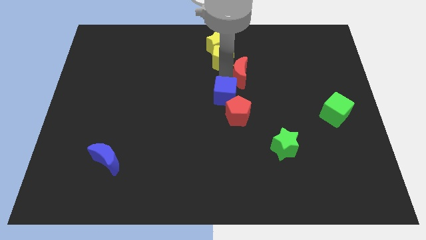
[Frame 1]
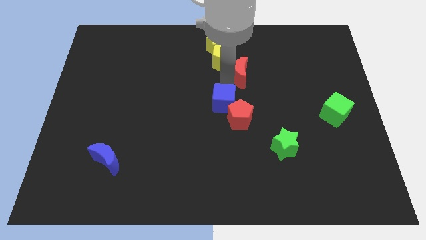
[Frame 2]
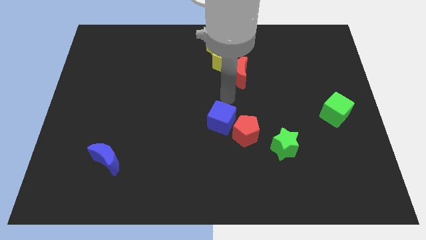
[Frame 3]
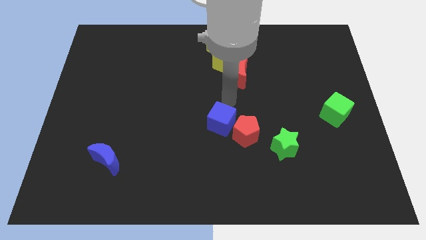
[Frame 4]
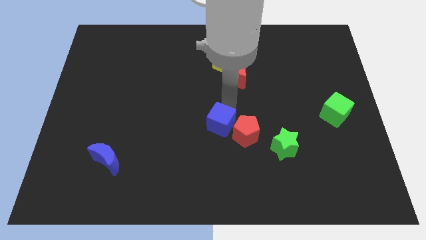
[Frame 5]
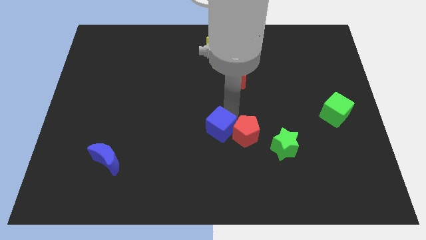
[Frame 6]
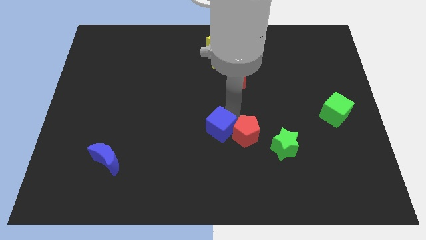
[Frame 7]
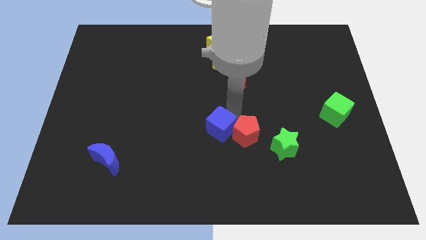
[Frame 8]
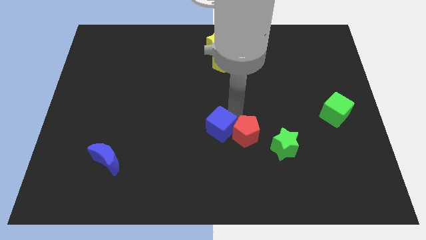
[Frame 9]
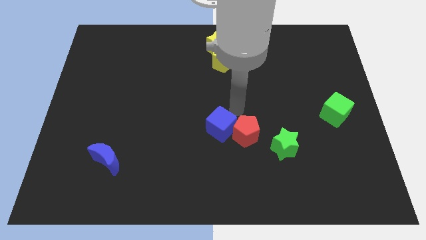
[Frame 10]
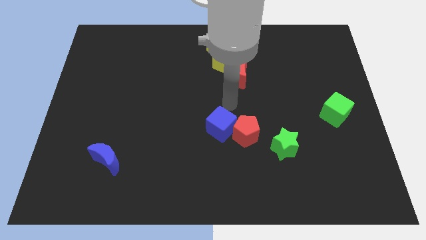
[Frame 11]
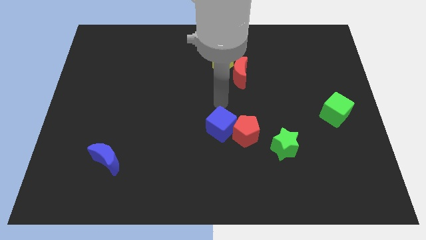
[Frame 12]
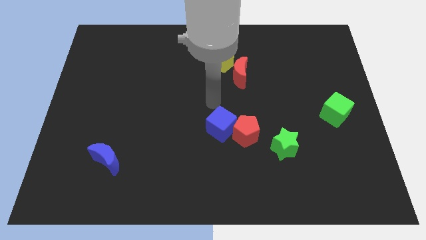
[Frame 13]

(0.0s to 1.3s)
push the blue cube and red pentagon towards the bottom center of the board

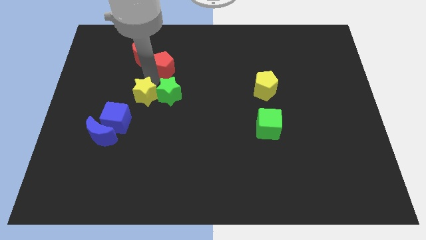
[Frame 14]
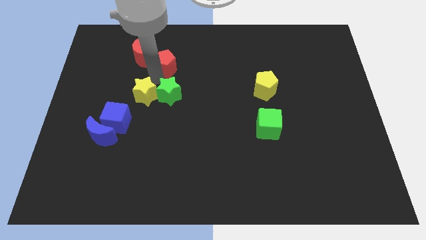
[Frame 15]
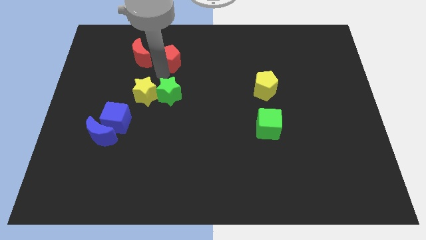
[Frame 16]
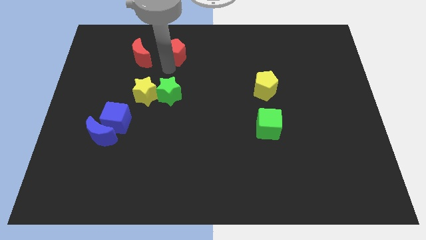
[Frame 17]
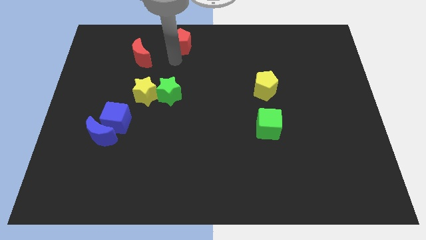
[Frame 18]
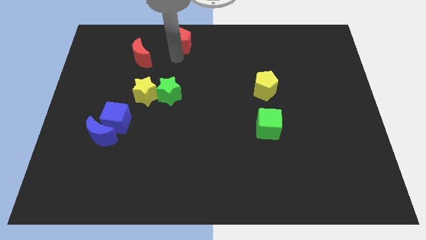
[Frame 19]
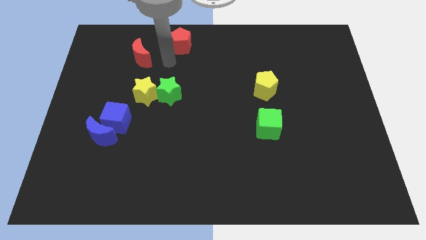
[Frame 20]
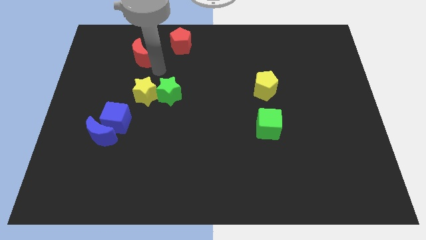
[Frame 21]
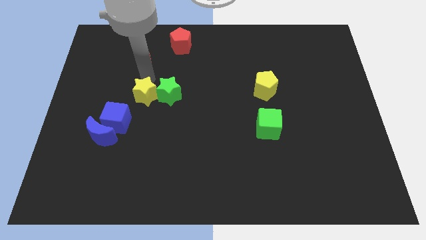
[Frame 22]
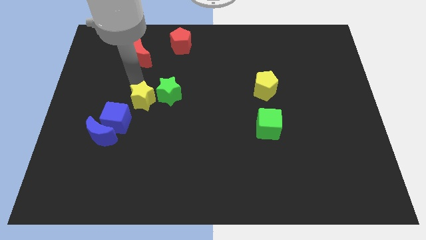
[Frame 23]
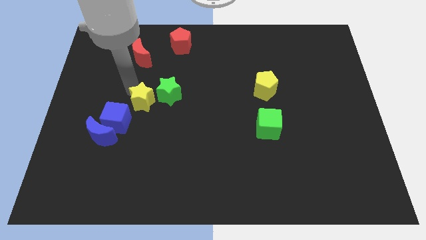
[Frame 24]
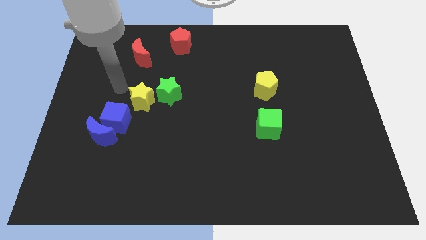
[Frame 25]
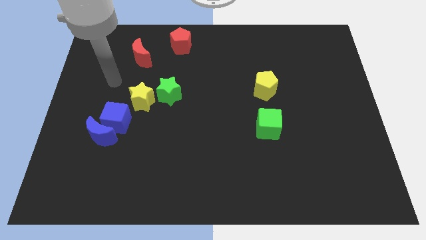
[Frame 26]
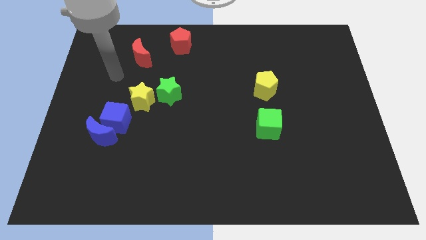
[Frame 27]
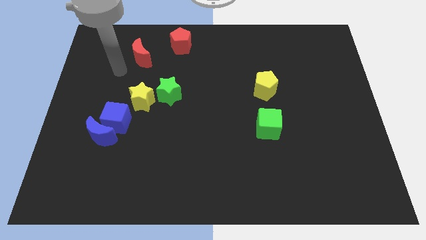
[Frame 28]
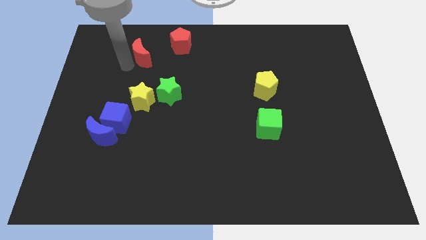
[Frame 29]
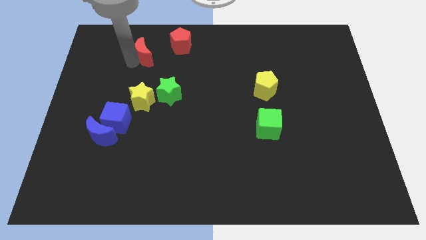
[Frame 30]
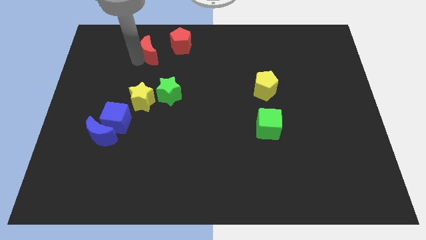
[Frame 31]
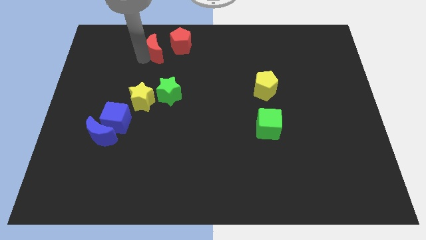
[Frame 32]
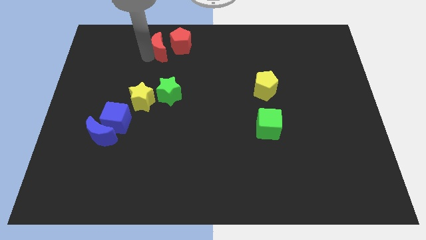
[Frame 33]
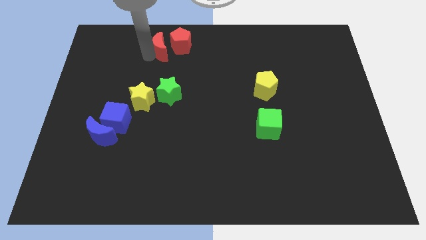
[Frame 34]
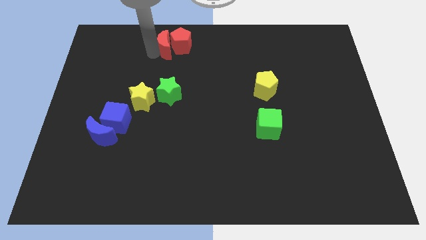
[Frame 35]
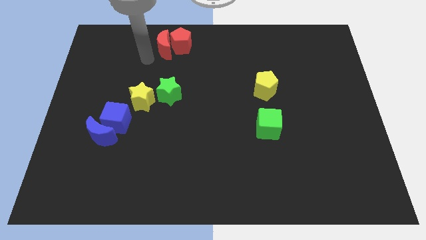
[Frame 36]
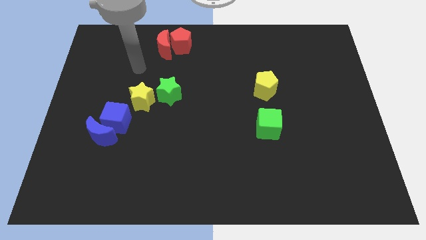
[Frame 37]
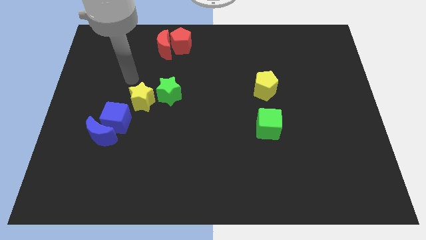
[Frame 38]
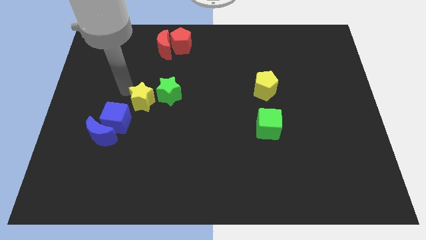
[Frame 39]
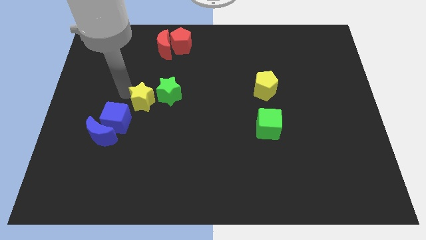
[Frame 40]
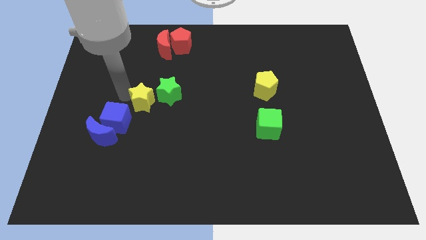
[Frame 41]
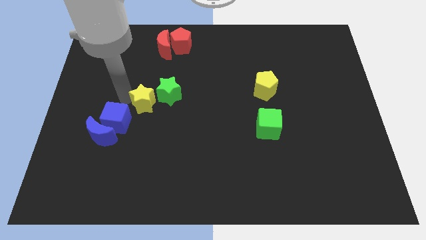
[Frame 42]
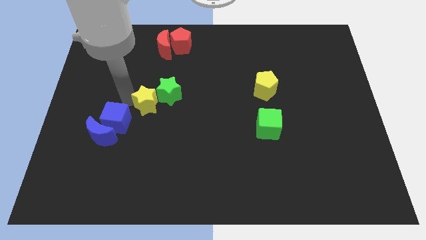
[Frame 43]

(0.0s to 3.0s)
separate the red pentagon from yellow star

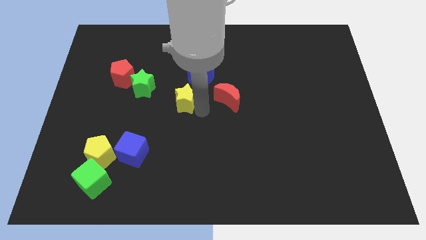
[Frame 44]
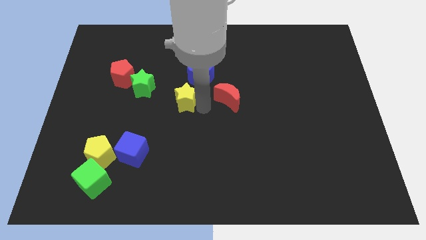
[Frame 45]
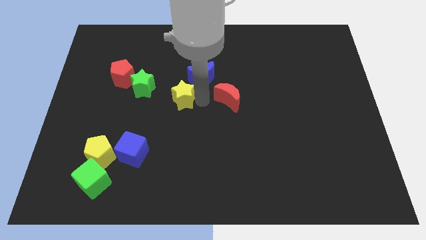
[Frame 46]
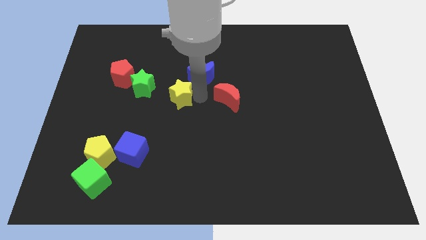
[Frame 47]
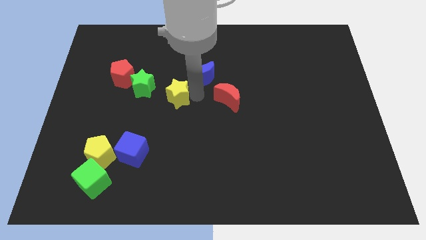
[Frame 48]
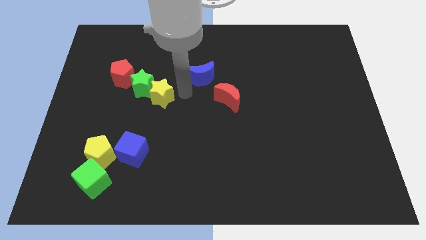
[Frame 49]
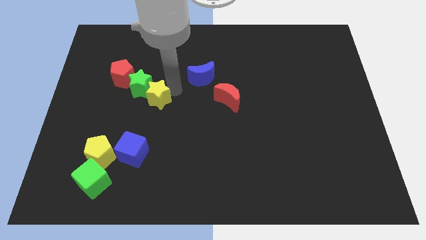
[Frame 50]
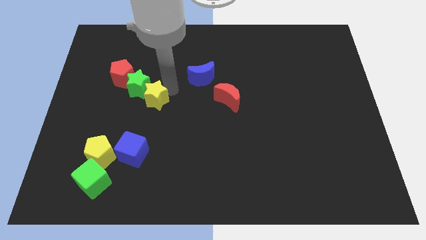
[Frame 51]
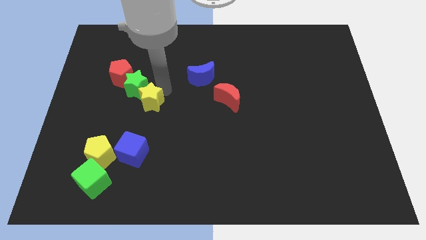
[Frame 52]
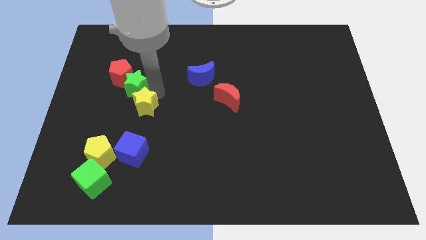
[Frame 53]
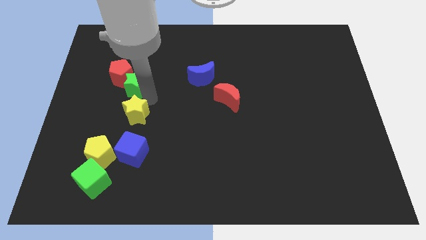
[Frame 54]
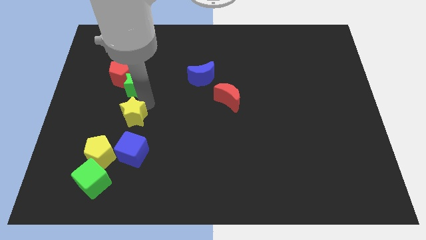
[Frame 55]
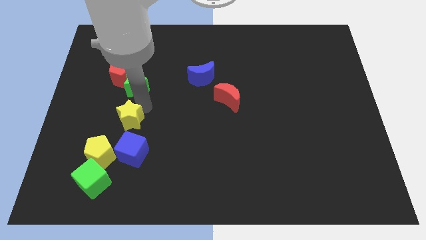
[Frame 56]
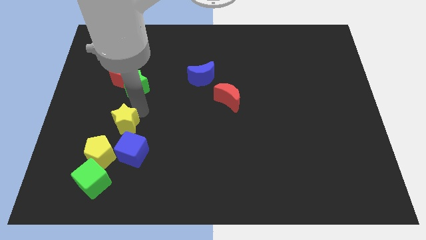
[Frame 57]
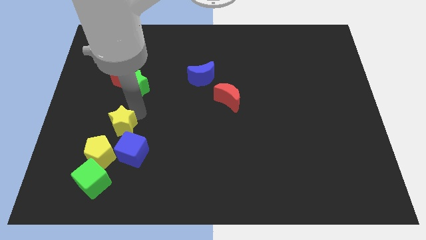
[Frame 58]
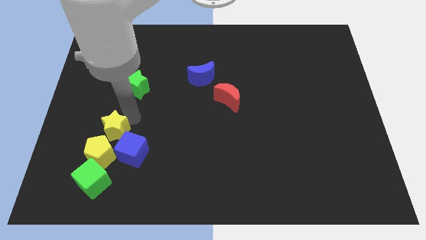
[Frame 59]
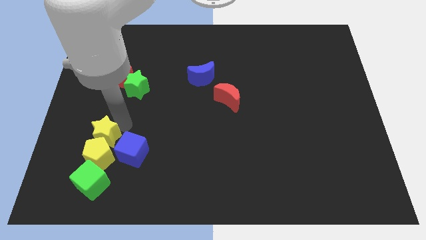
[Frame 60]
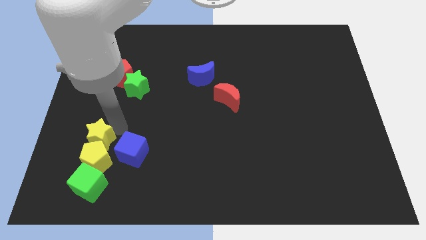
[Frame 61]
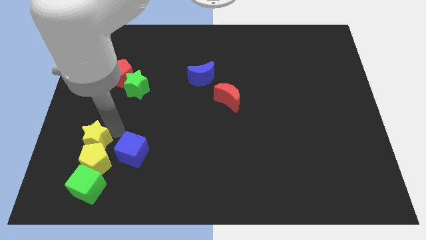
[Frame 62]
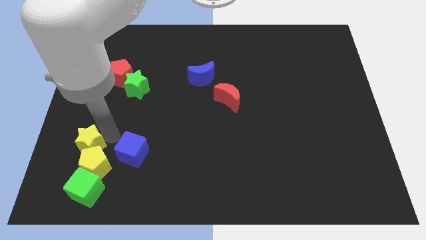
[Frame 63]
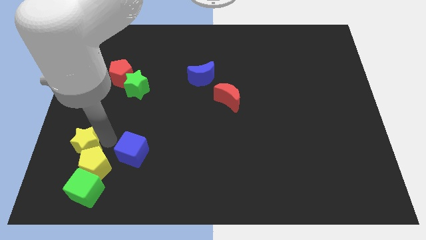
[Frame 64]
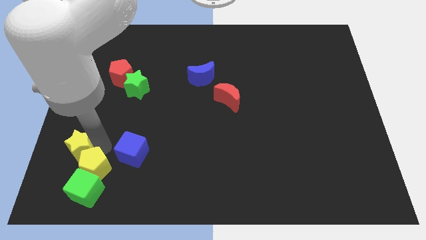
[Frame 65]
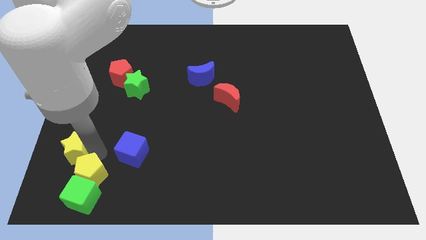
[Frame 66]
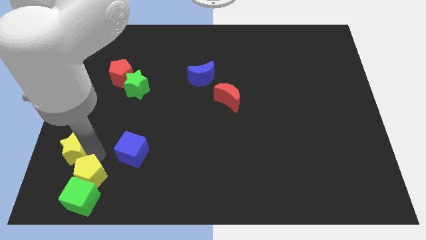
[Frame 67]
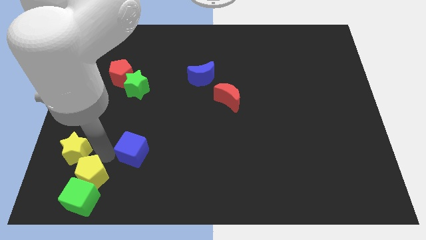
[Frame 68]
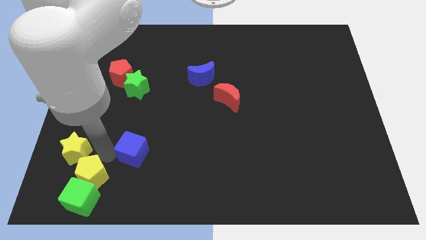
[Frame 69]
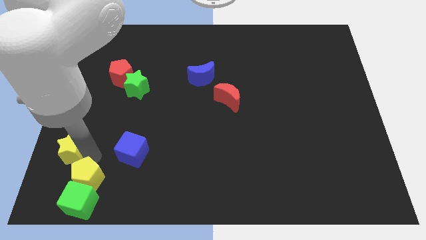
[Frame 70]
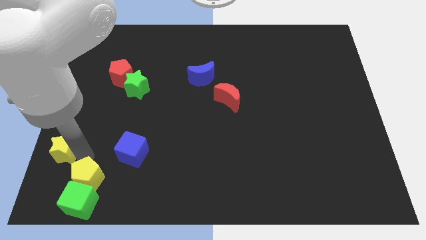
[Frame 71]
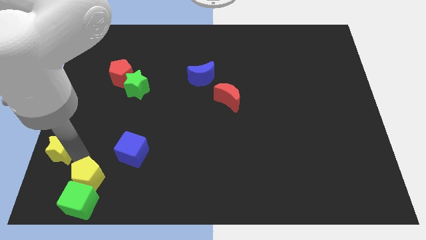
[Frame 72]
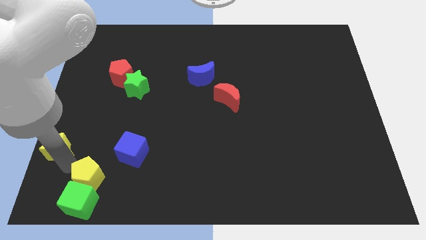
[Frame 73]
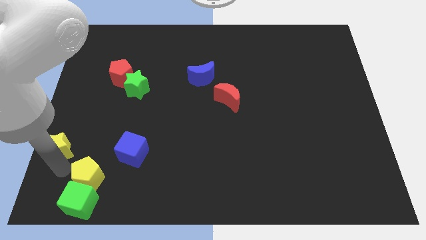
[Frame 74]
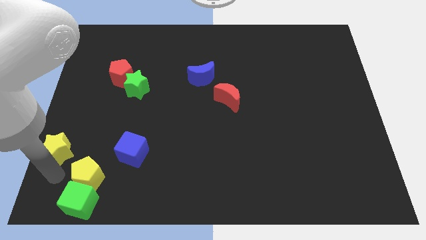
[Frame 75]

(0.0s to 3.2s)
push the yellow star to the top left side of the yellow pentagon

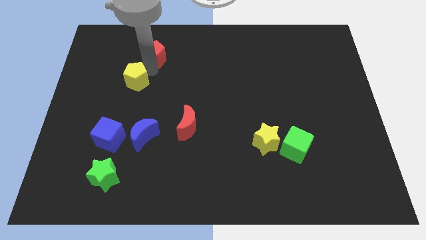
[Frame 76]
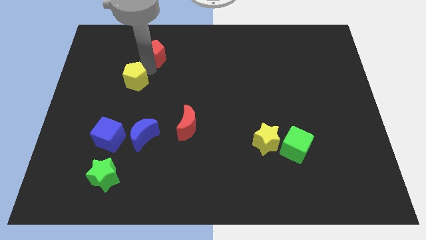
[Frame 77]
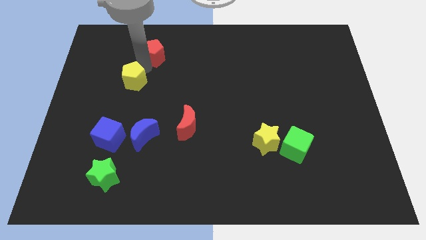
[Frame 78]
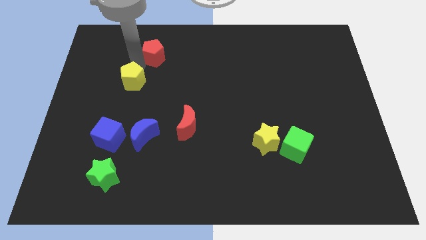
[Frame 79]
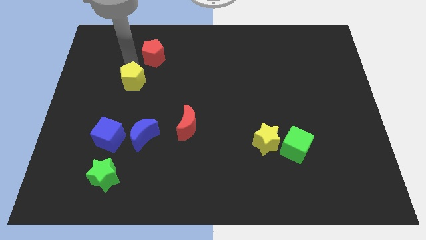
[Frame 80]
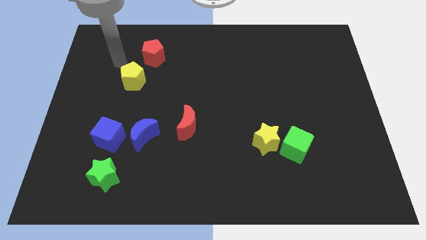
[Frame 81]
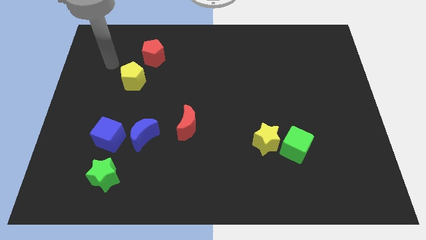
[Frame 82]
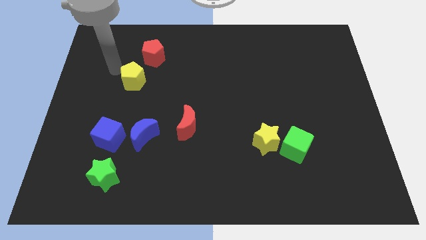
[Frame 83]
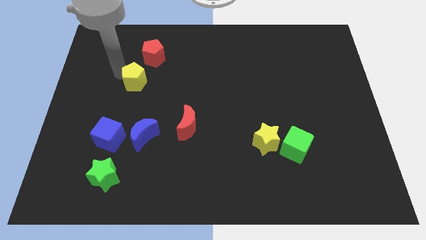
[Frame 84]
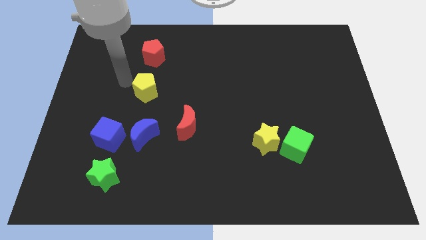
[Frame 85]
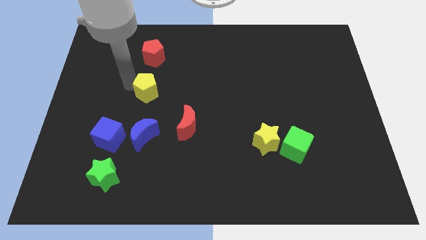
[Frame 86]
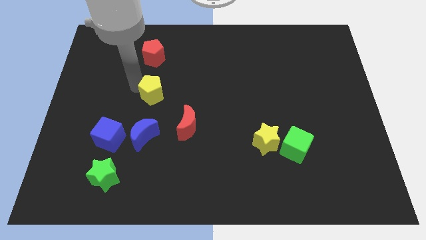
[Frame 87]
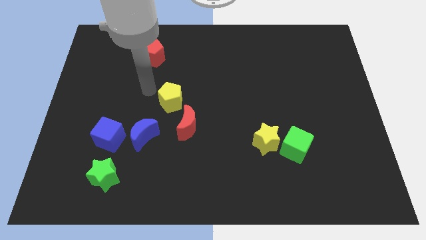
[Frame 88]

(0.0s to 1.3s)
place the yellow pentagon vertically below the red pentagon

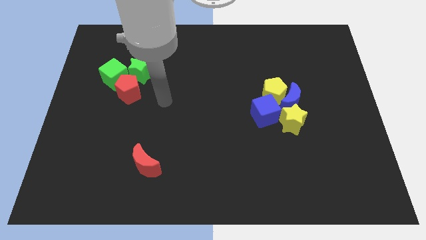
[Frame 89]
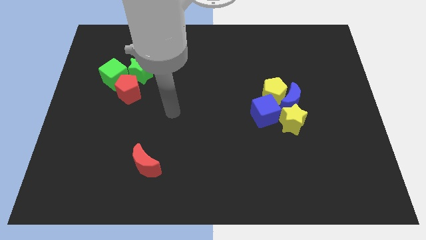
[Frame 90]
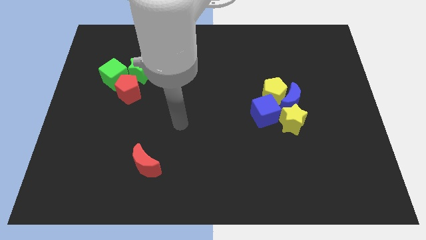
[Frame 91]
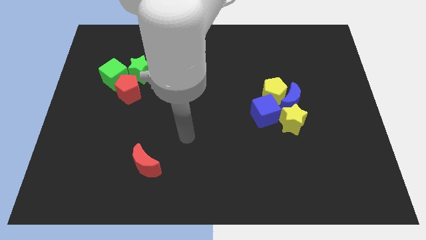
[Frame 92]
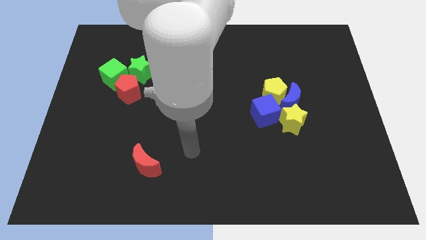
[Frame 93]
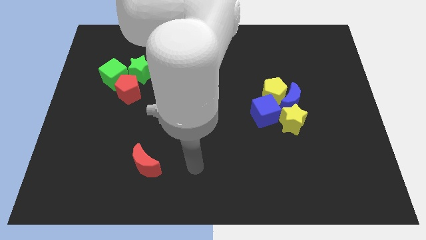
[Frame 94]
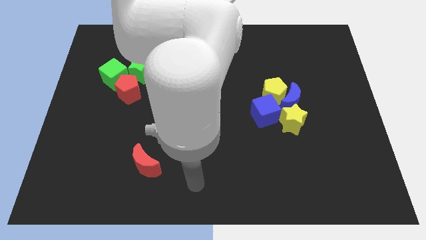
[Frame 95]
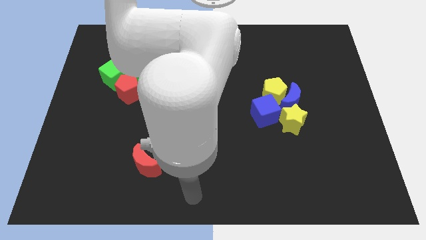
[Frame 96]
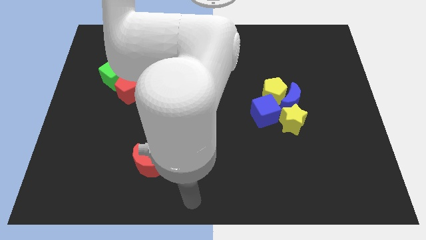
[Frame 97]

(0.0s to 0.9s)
put your arm at the bottom center of the board
